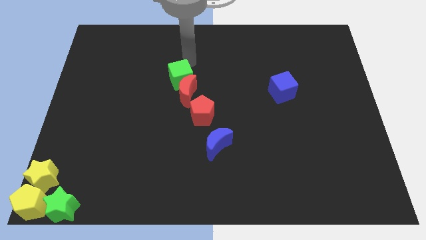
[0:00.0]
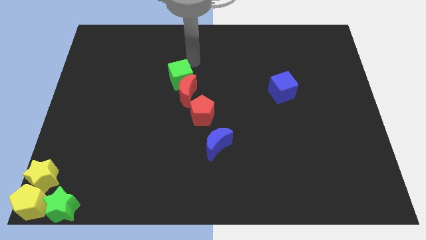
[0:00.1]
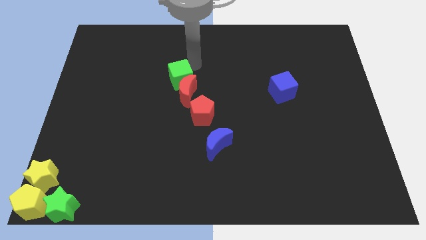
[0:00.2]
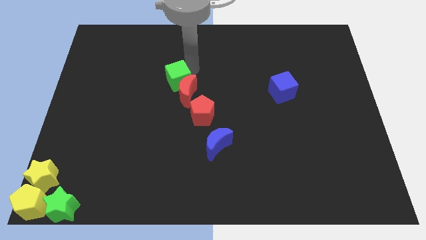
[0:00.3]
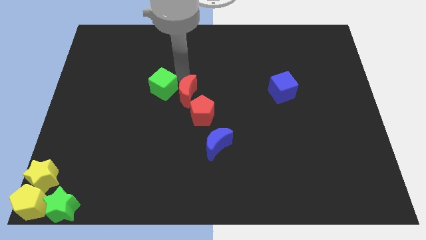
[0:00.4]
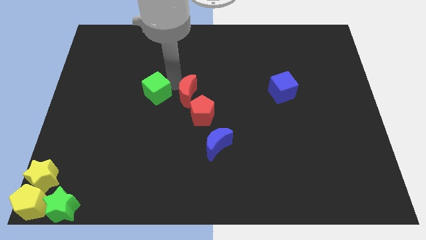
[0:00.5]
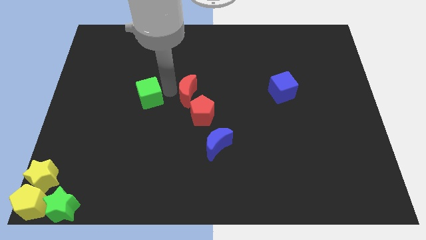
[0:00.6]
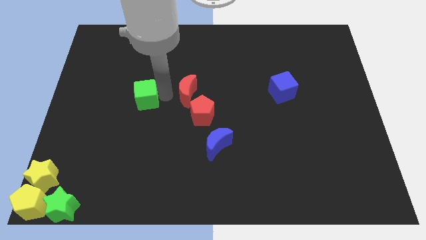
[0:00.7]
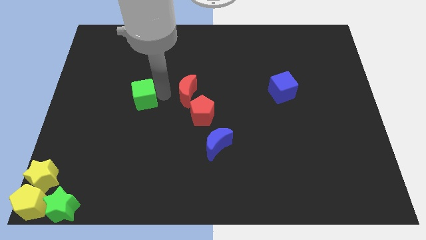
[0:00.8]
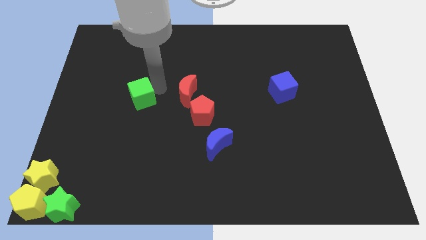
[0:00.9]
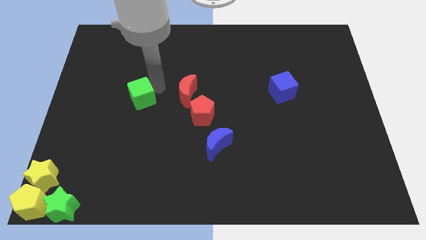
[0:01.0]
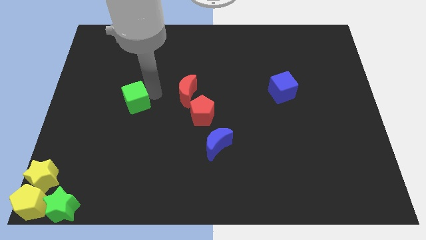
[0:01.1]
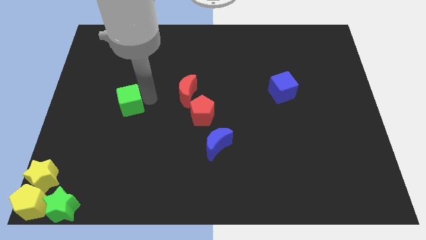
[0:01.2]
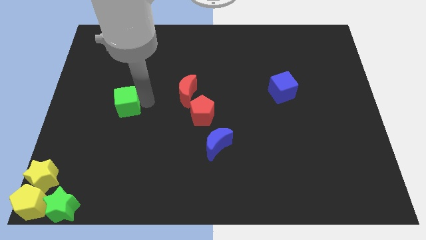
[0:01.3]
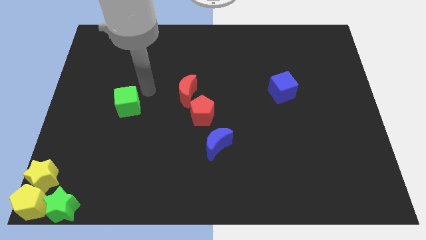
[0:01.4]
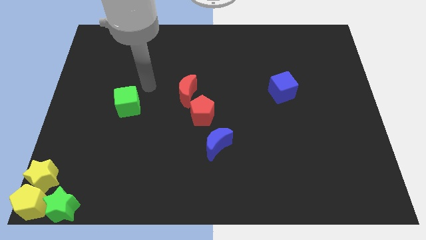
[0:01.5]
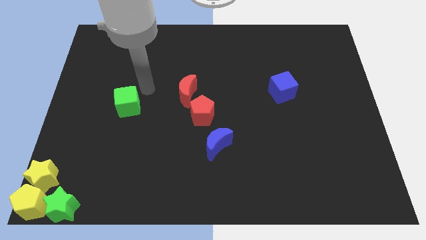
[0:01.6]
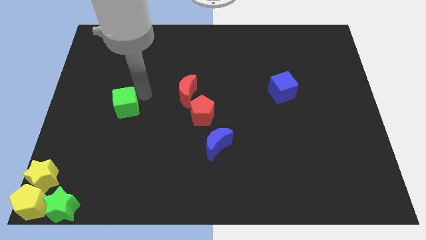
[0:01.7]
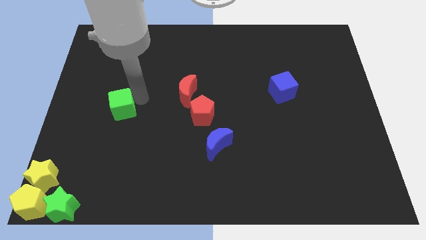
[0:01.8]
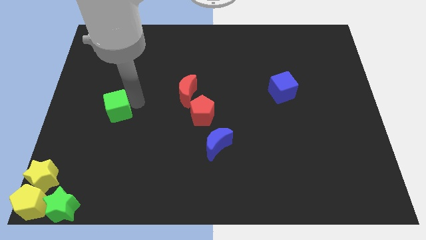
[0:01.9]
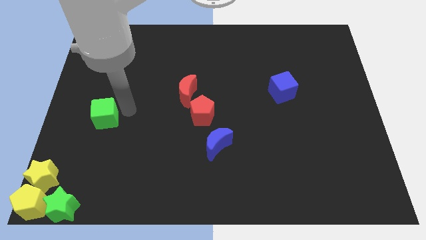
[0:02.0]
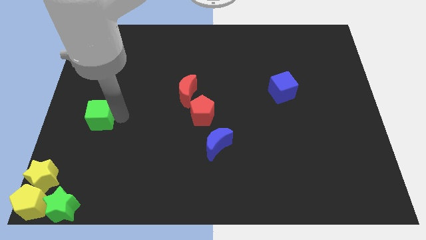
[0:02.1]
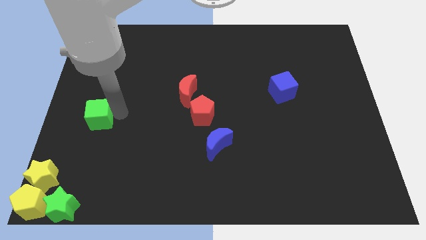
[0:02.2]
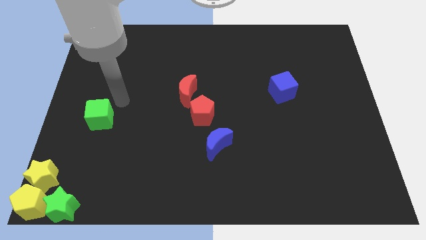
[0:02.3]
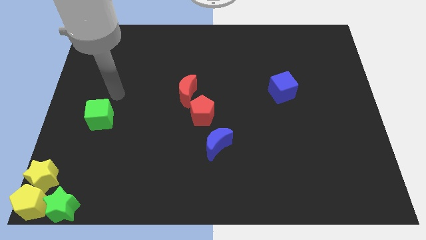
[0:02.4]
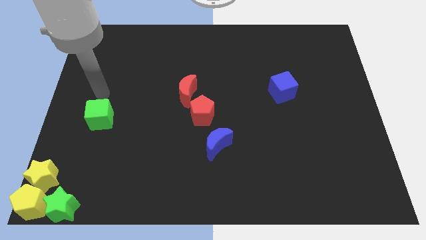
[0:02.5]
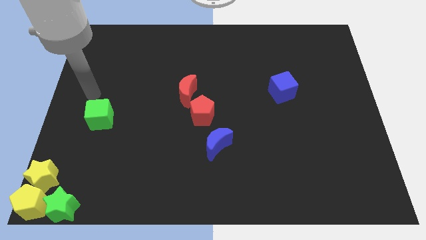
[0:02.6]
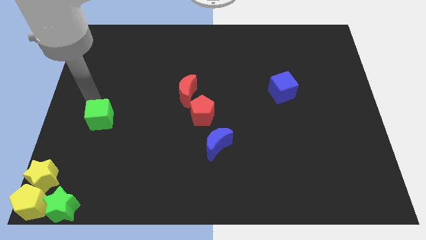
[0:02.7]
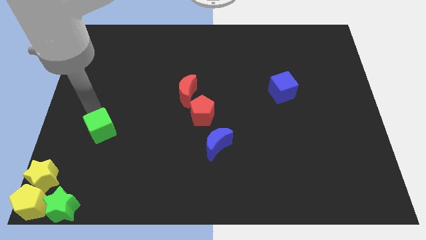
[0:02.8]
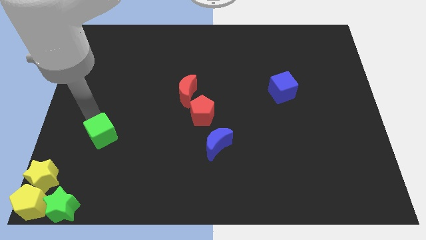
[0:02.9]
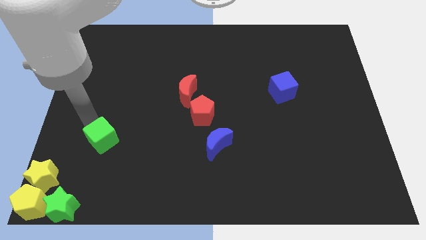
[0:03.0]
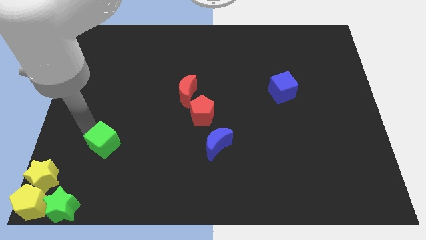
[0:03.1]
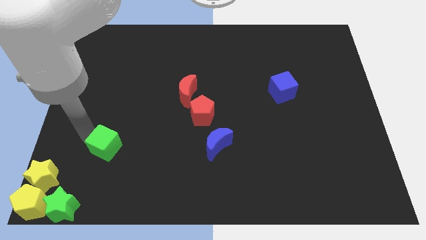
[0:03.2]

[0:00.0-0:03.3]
place the green cube diagonally top right to the green star

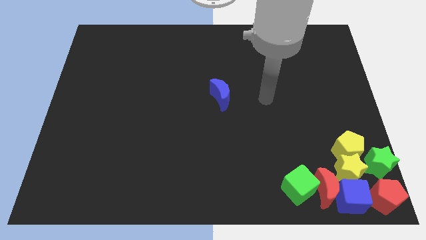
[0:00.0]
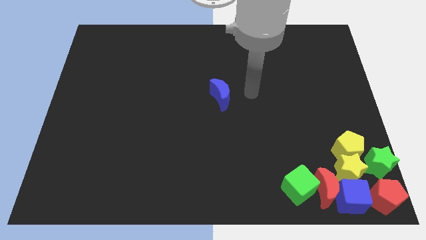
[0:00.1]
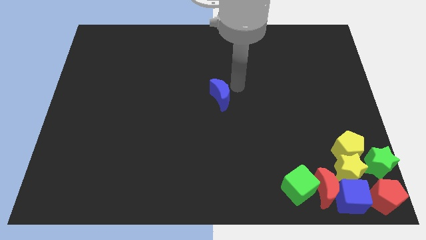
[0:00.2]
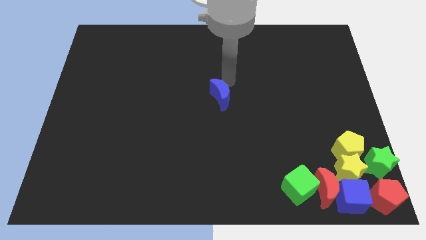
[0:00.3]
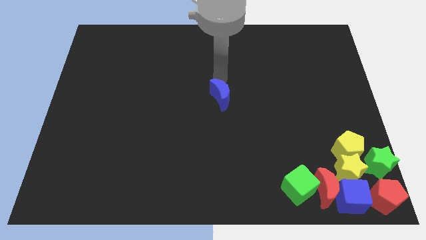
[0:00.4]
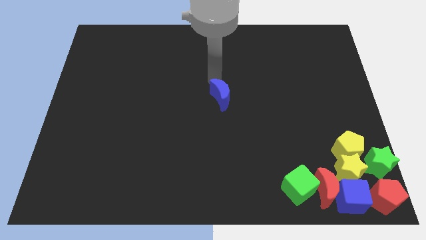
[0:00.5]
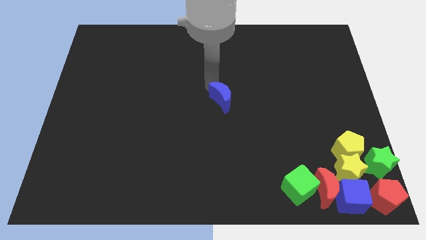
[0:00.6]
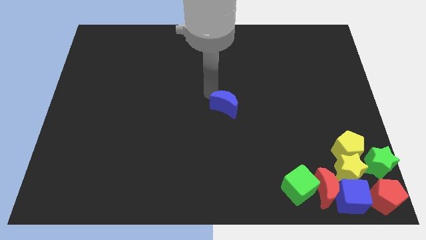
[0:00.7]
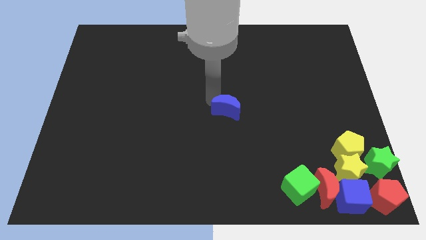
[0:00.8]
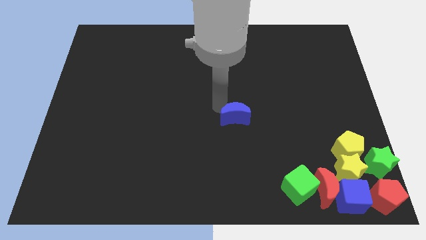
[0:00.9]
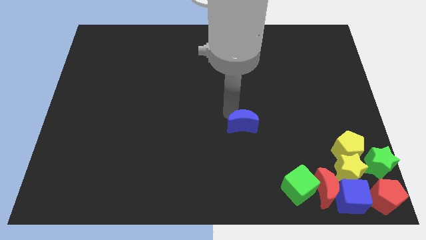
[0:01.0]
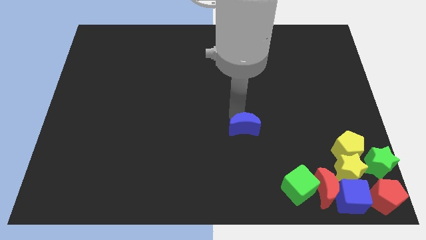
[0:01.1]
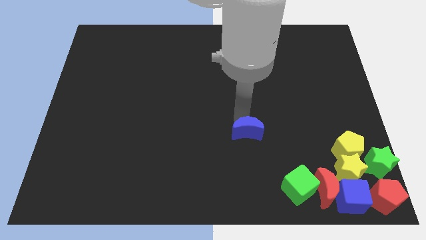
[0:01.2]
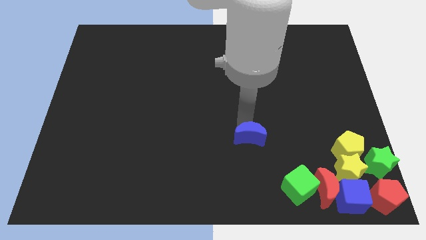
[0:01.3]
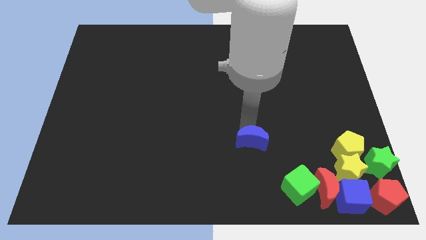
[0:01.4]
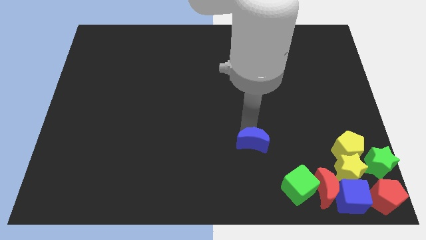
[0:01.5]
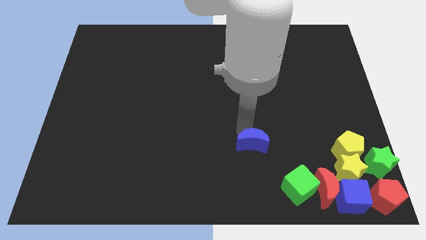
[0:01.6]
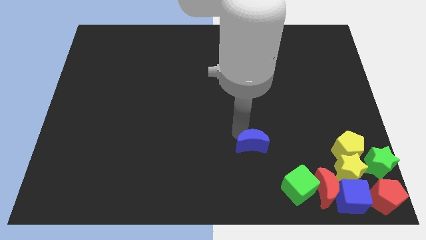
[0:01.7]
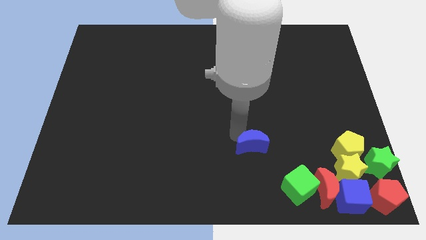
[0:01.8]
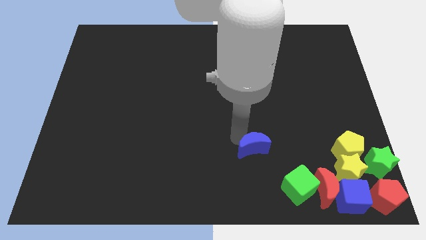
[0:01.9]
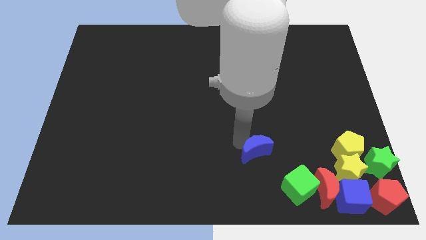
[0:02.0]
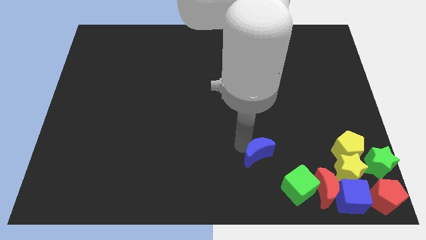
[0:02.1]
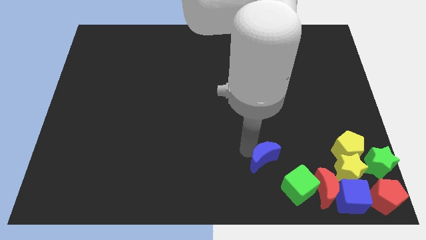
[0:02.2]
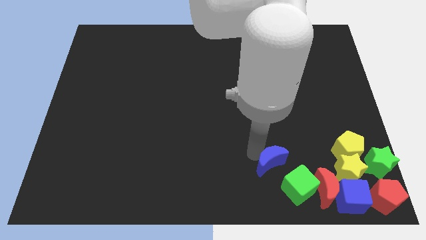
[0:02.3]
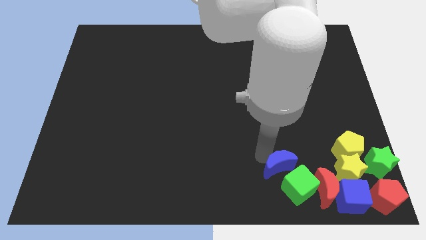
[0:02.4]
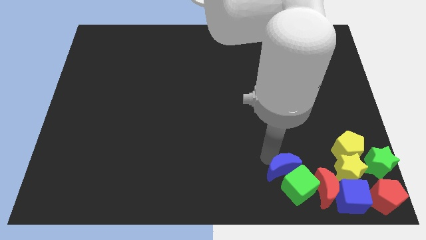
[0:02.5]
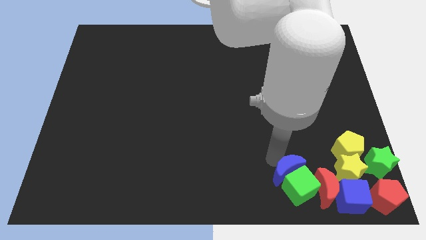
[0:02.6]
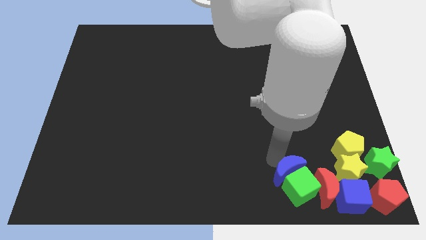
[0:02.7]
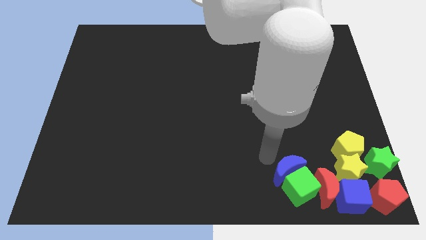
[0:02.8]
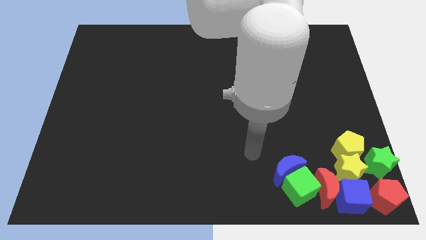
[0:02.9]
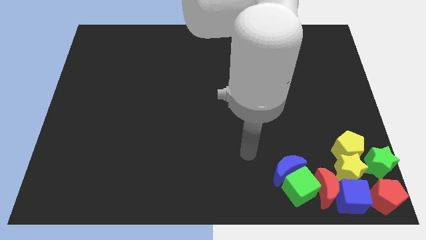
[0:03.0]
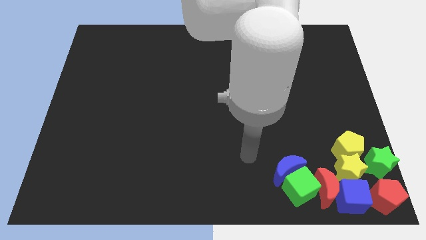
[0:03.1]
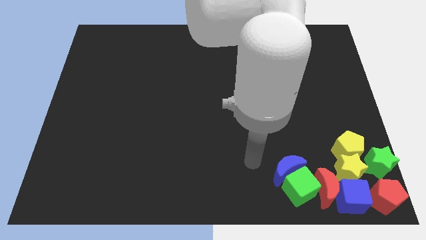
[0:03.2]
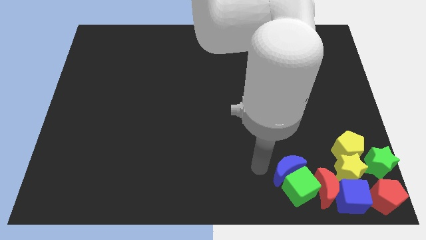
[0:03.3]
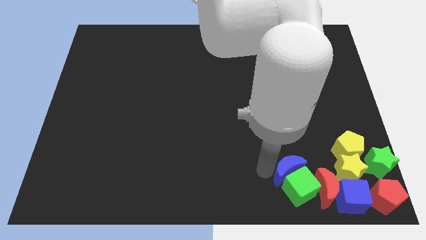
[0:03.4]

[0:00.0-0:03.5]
push the blue moon into the green cube

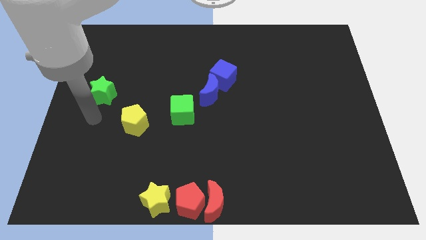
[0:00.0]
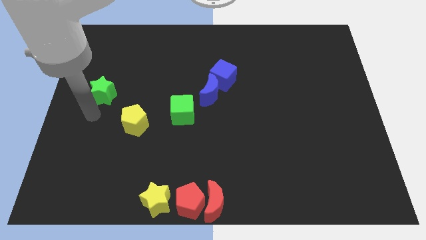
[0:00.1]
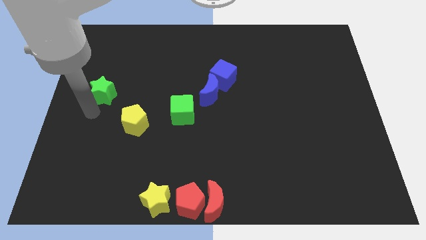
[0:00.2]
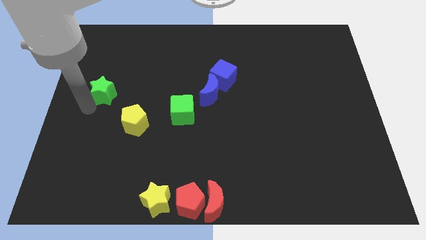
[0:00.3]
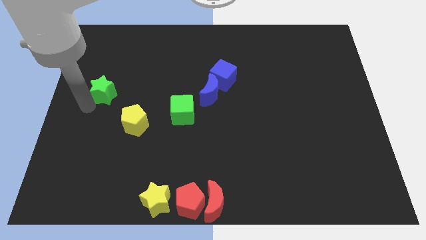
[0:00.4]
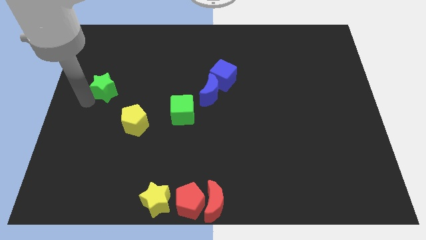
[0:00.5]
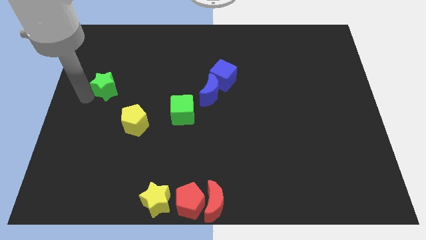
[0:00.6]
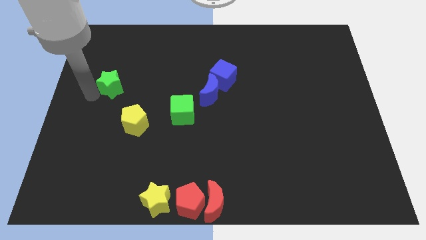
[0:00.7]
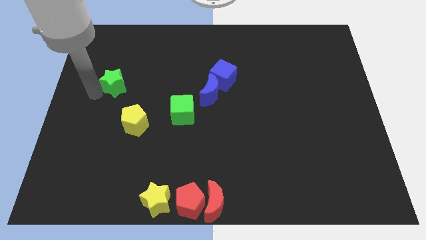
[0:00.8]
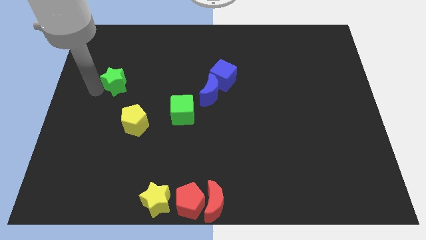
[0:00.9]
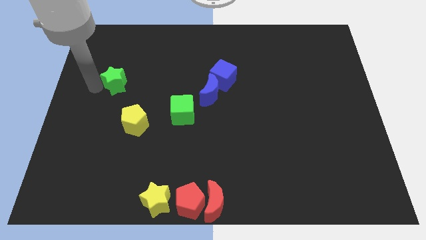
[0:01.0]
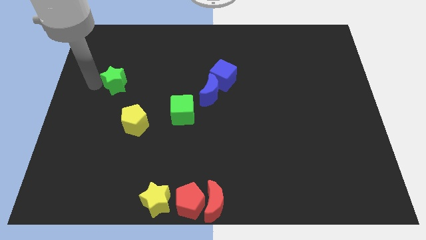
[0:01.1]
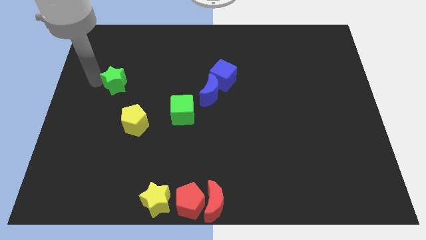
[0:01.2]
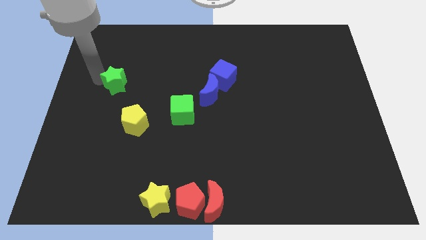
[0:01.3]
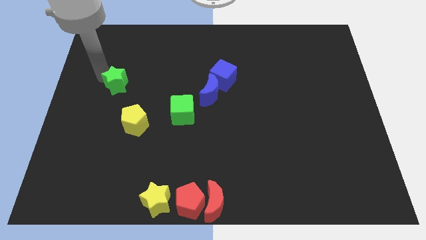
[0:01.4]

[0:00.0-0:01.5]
move the green star diagonal to the yellow pentagon

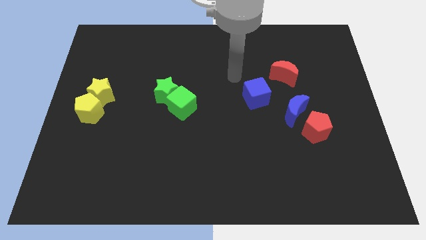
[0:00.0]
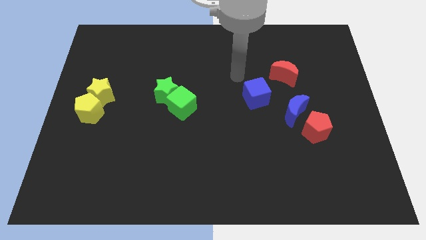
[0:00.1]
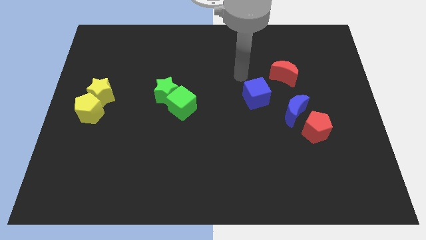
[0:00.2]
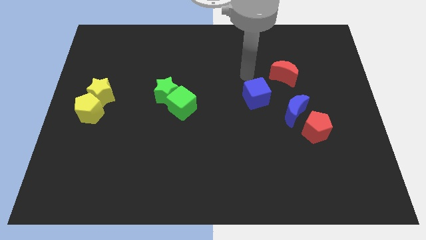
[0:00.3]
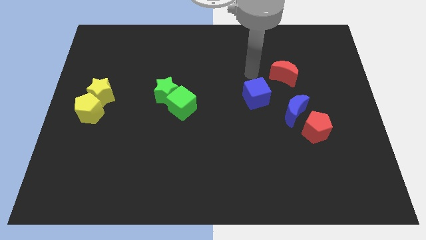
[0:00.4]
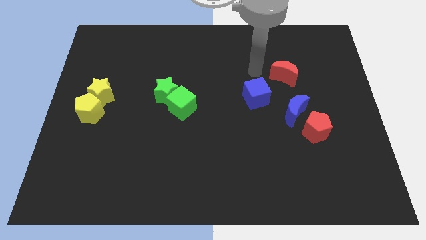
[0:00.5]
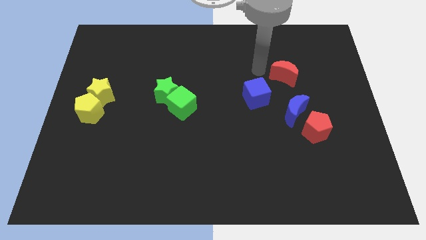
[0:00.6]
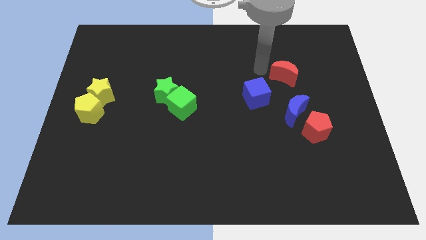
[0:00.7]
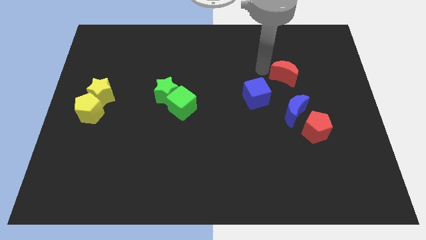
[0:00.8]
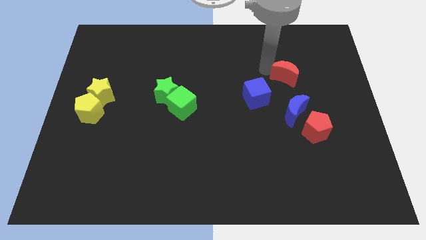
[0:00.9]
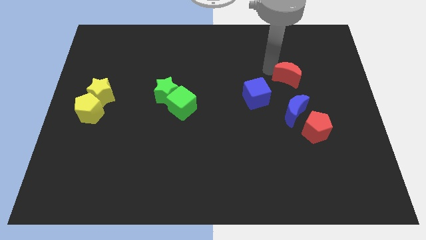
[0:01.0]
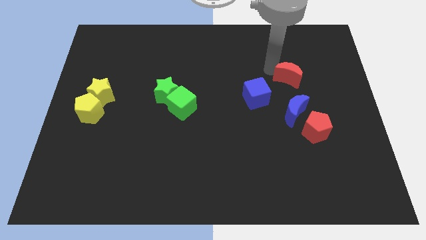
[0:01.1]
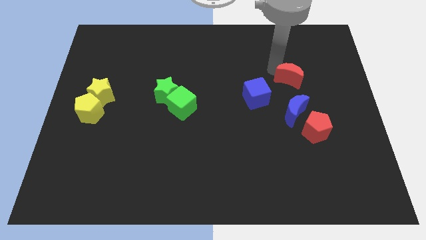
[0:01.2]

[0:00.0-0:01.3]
place arm near red moon
